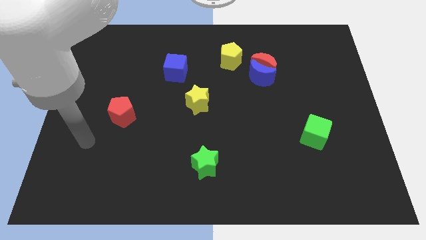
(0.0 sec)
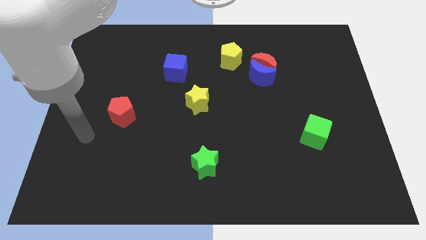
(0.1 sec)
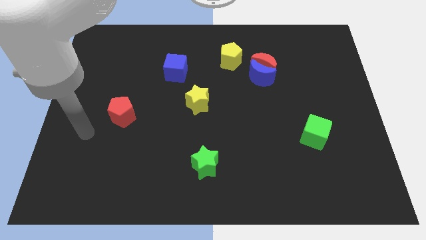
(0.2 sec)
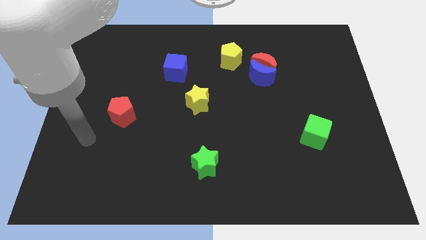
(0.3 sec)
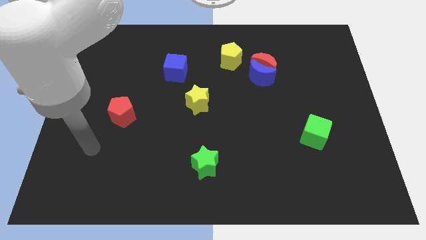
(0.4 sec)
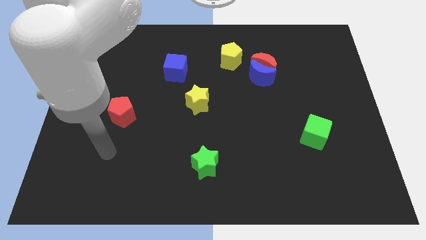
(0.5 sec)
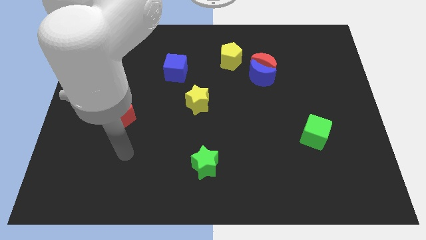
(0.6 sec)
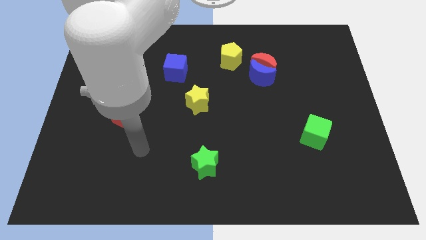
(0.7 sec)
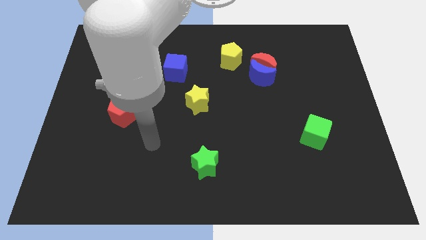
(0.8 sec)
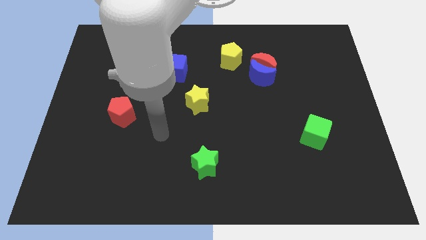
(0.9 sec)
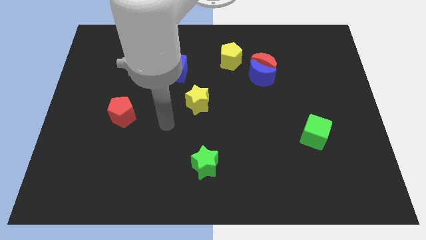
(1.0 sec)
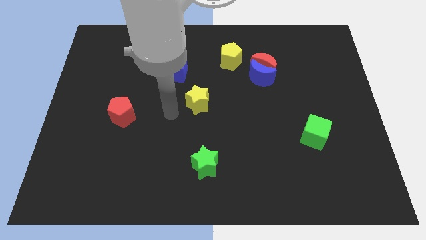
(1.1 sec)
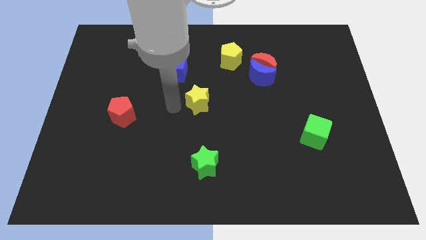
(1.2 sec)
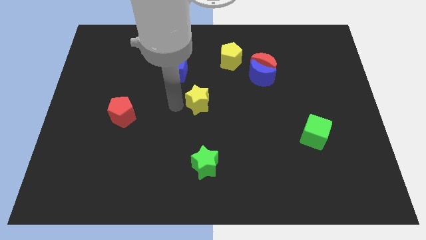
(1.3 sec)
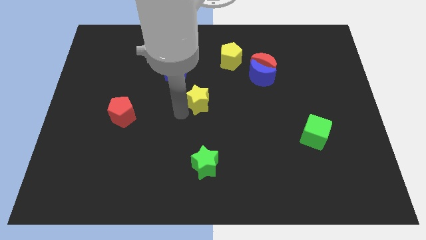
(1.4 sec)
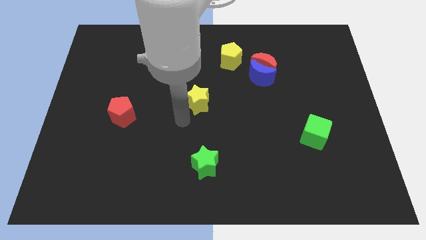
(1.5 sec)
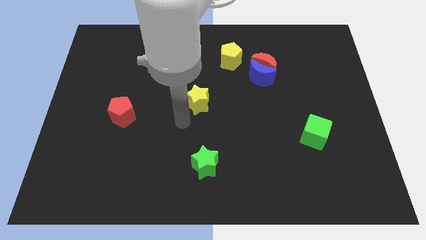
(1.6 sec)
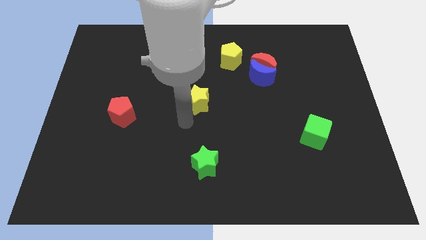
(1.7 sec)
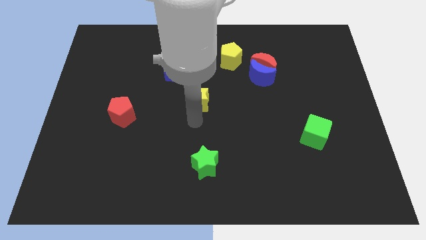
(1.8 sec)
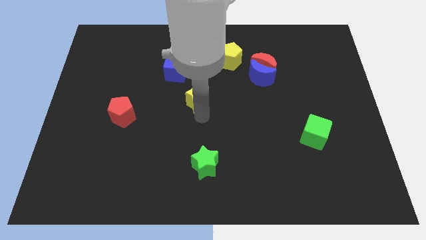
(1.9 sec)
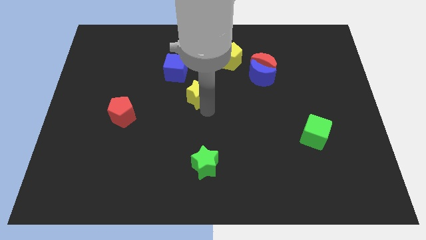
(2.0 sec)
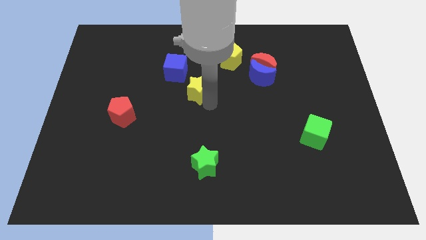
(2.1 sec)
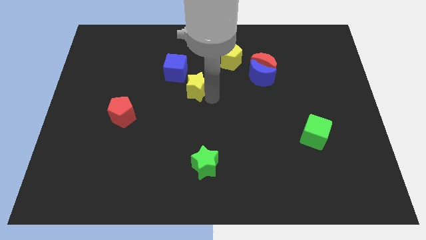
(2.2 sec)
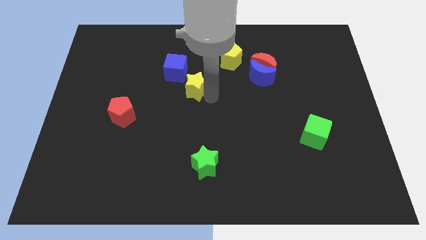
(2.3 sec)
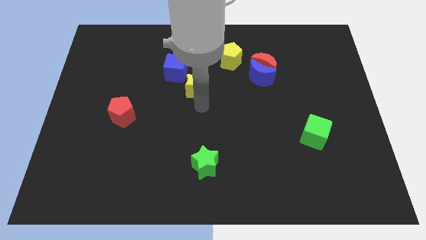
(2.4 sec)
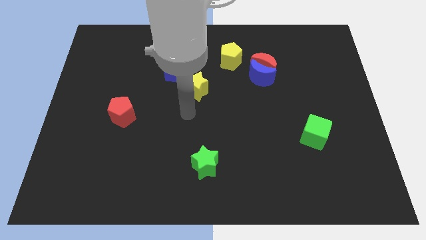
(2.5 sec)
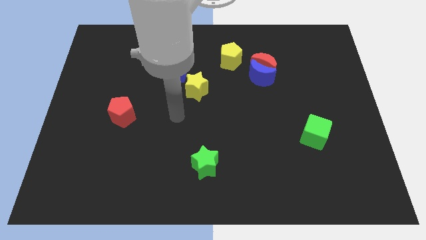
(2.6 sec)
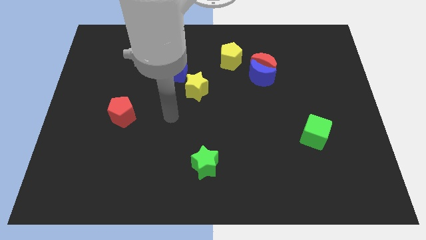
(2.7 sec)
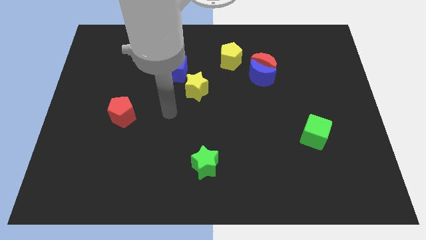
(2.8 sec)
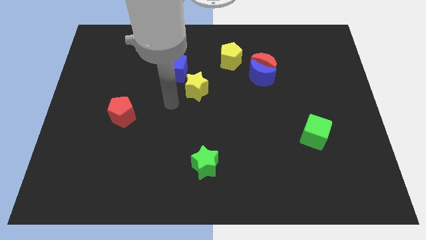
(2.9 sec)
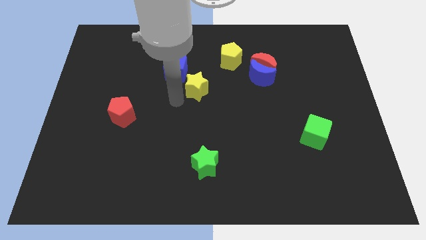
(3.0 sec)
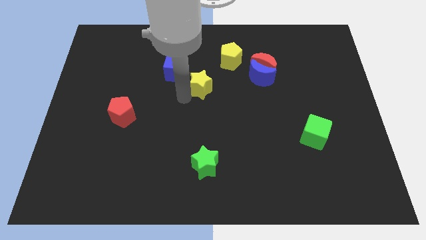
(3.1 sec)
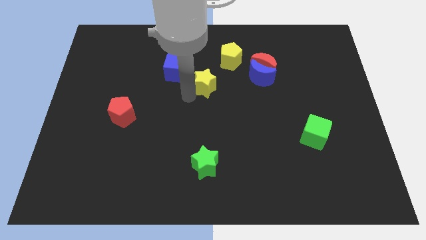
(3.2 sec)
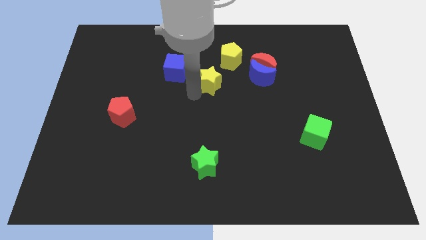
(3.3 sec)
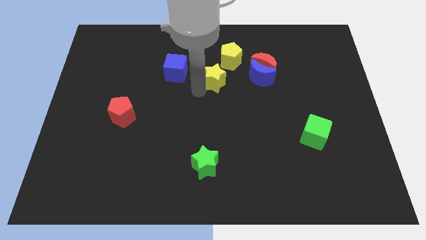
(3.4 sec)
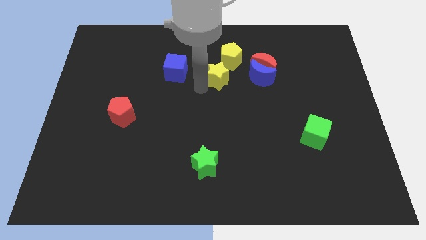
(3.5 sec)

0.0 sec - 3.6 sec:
move the yellow star close to the yellow pentagon

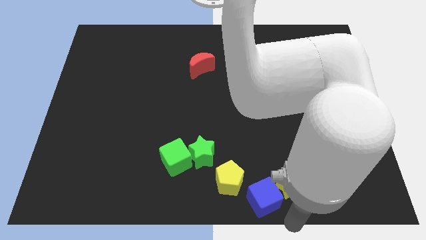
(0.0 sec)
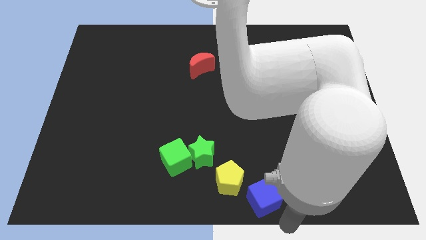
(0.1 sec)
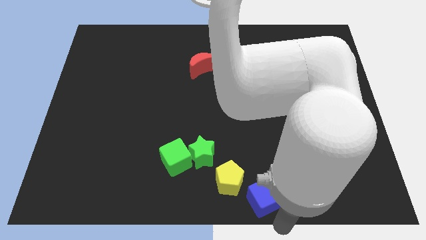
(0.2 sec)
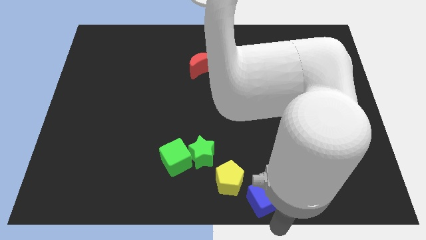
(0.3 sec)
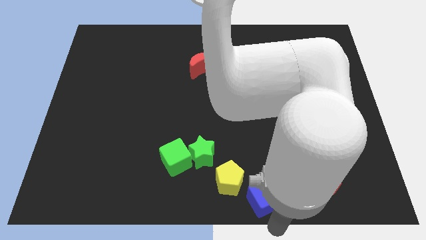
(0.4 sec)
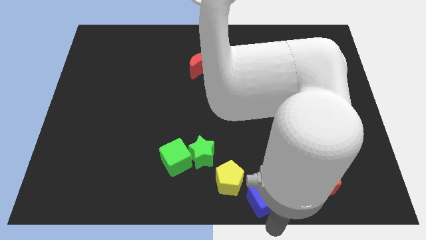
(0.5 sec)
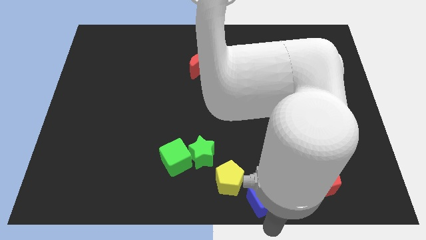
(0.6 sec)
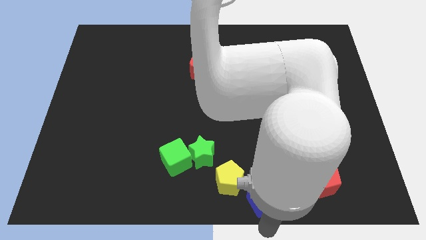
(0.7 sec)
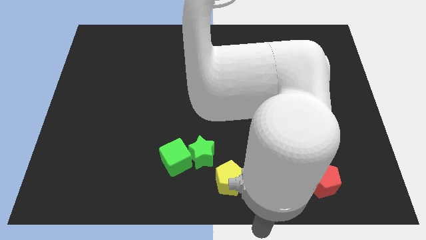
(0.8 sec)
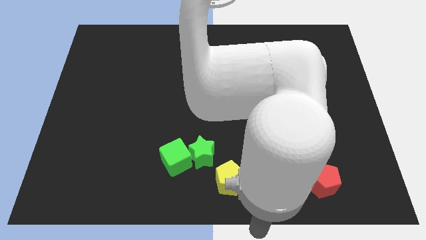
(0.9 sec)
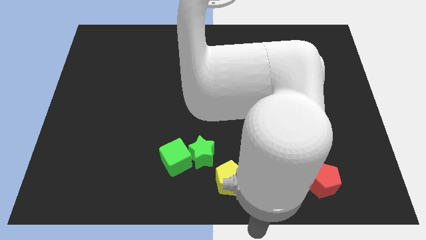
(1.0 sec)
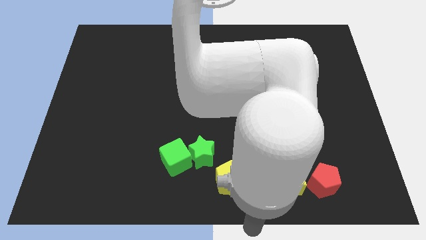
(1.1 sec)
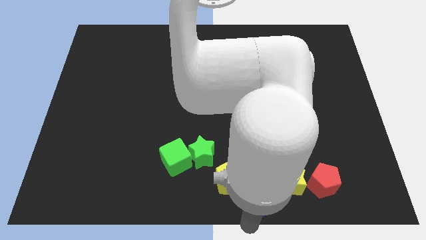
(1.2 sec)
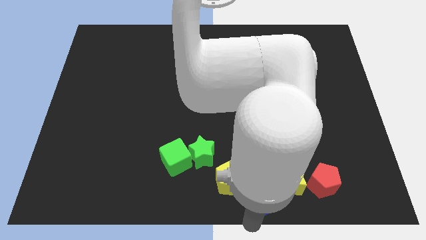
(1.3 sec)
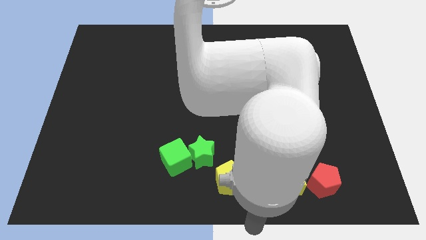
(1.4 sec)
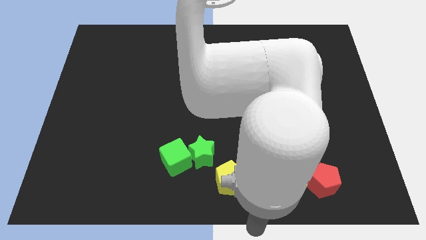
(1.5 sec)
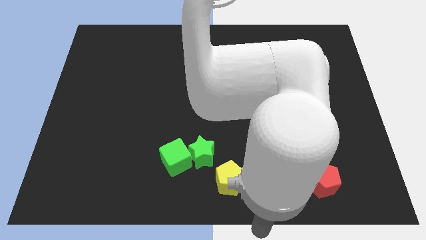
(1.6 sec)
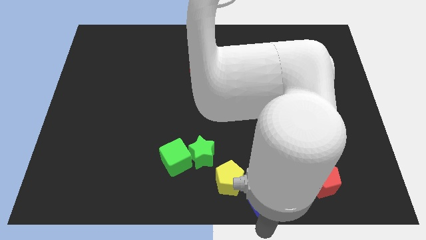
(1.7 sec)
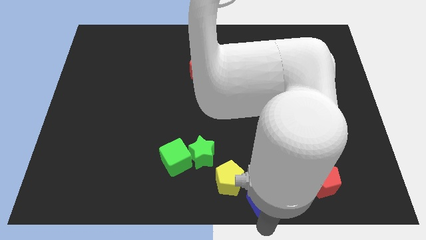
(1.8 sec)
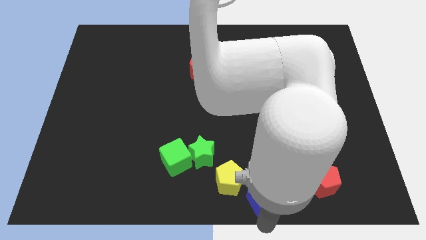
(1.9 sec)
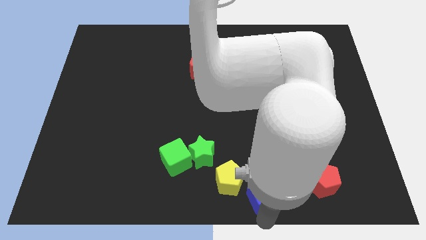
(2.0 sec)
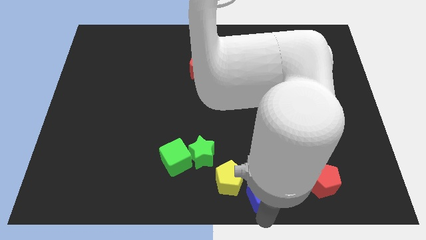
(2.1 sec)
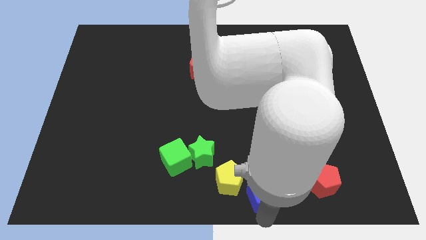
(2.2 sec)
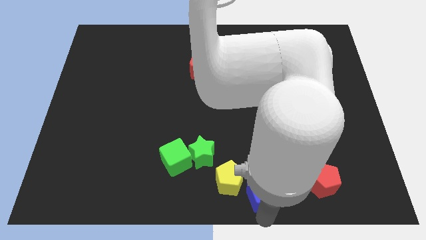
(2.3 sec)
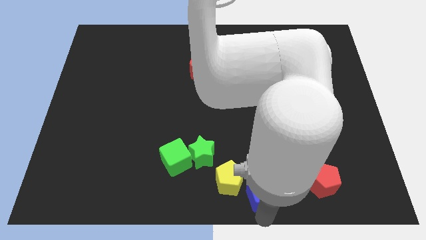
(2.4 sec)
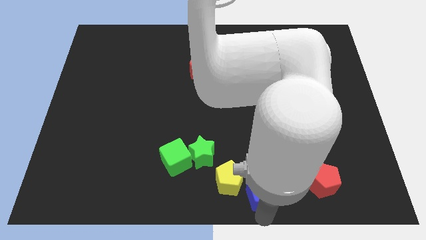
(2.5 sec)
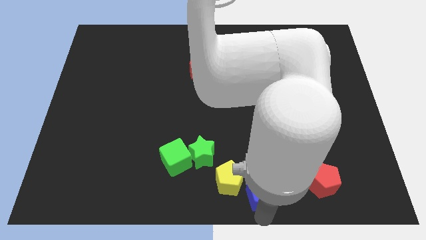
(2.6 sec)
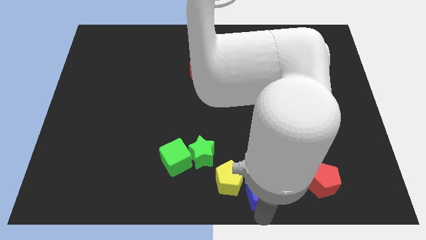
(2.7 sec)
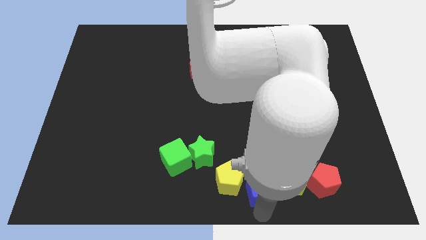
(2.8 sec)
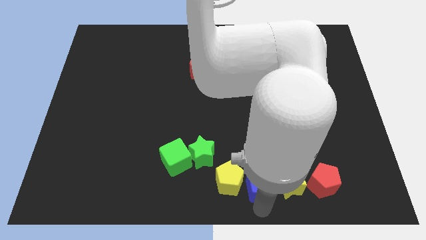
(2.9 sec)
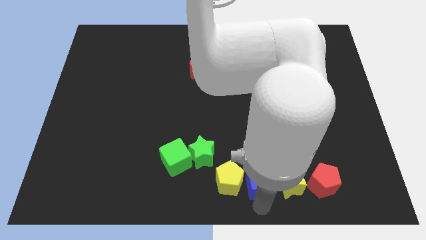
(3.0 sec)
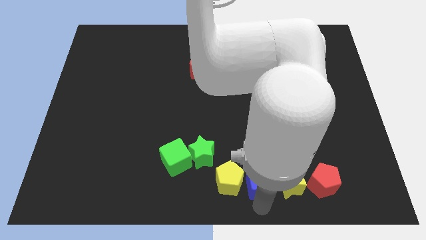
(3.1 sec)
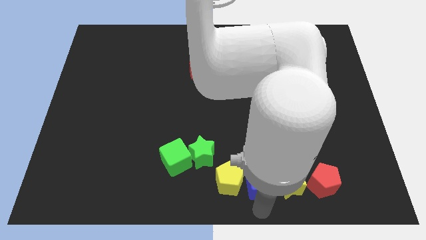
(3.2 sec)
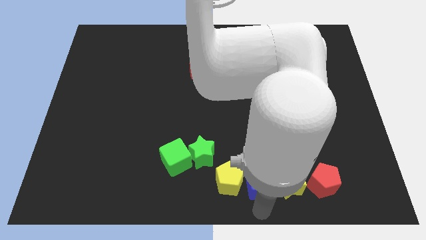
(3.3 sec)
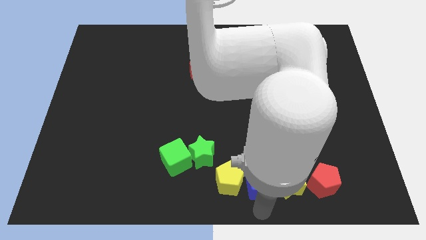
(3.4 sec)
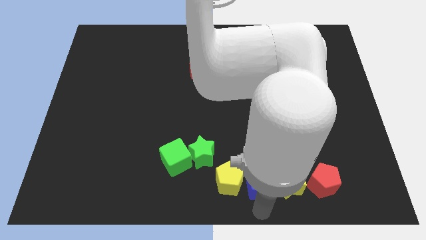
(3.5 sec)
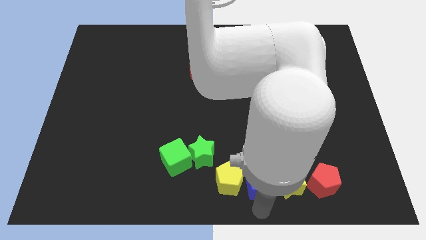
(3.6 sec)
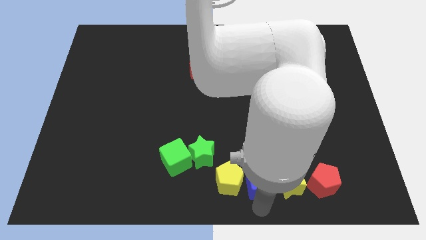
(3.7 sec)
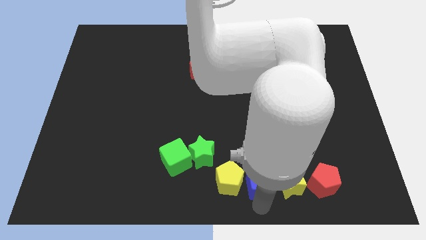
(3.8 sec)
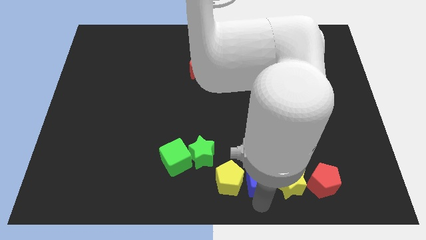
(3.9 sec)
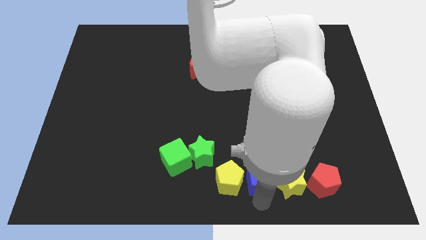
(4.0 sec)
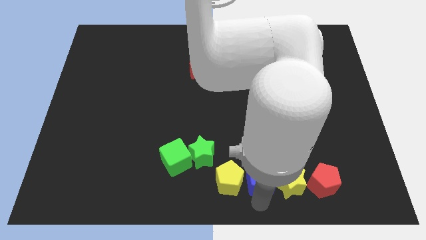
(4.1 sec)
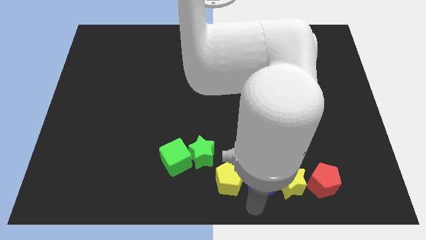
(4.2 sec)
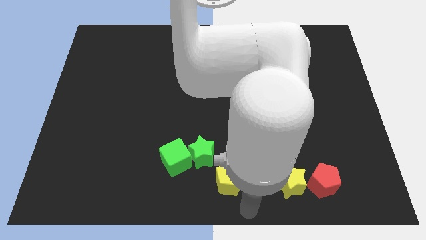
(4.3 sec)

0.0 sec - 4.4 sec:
place the blue cube in between the yellow star and yellow pentagon

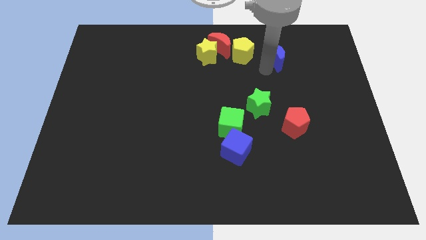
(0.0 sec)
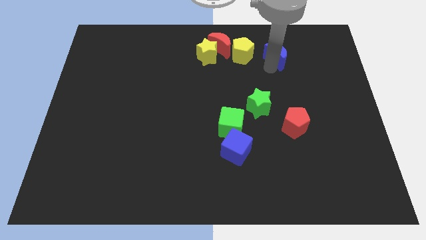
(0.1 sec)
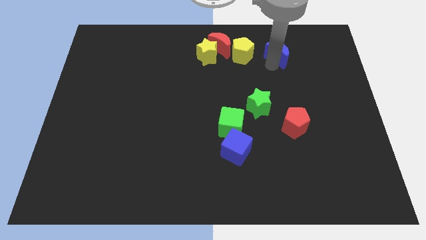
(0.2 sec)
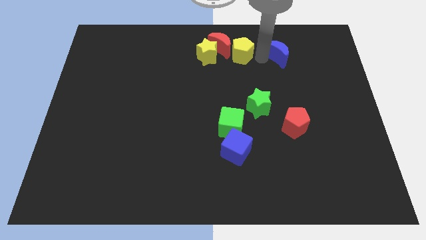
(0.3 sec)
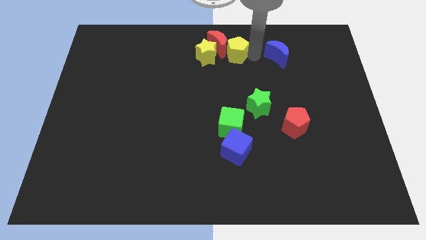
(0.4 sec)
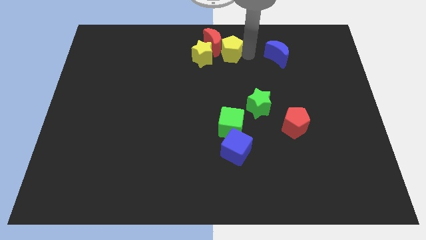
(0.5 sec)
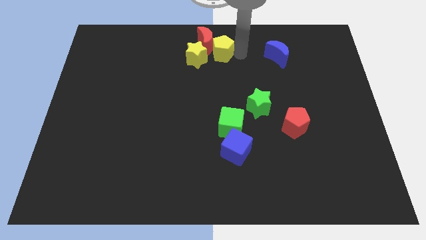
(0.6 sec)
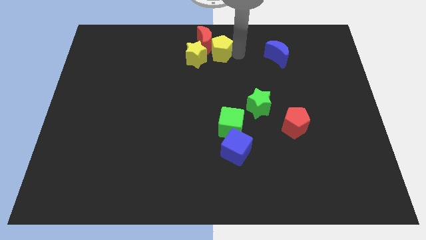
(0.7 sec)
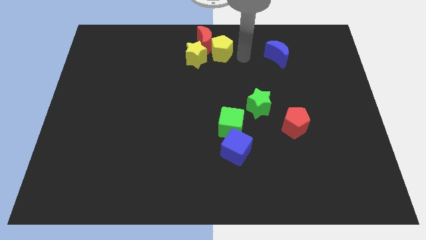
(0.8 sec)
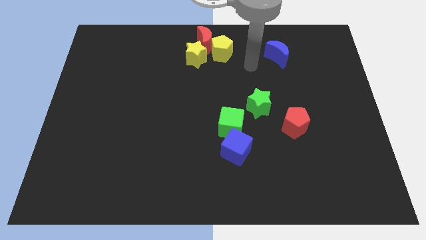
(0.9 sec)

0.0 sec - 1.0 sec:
make the yellow pentagon to touch the red crescent
